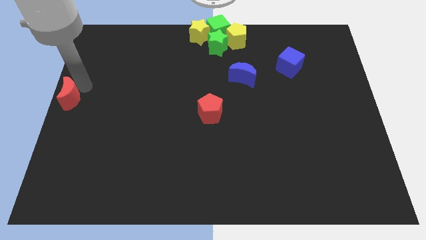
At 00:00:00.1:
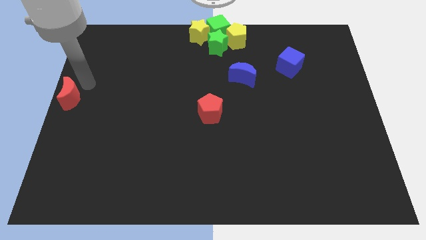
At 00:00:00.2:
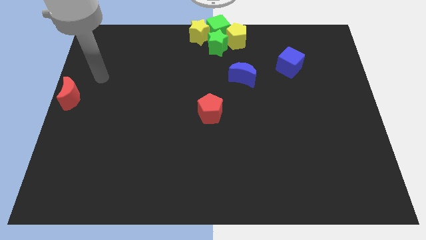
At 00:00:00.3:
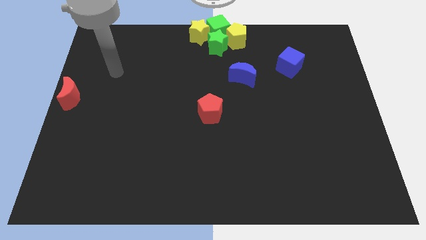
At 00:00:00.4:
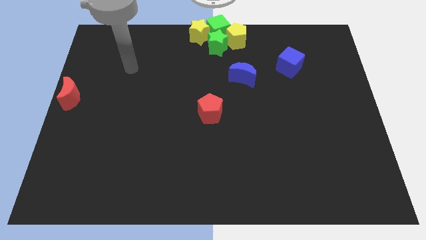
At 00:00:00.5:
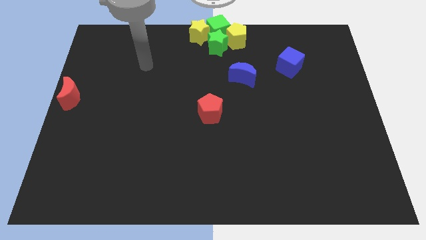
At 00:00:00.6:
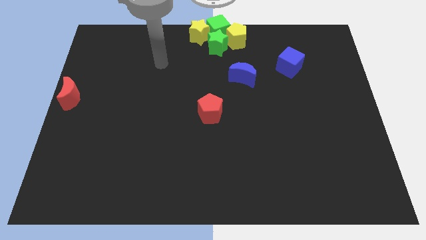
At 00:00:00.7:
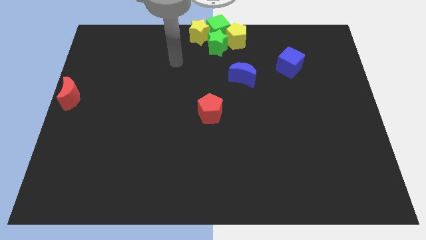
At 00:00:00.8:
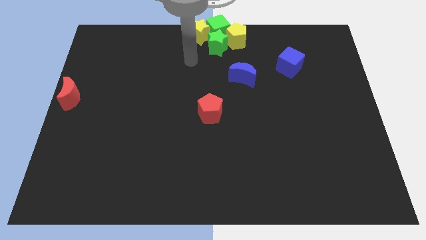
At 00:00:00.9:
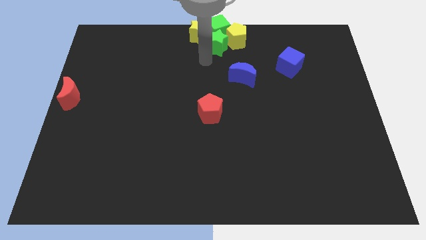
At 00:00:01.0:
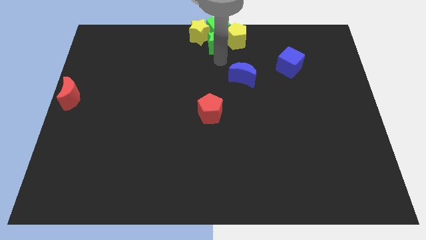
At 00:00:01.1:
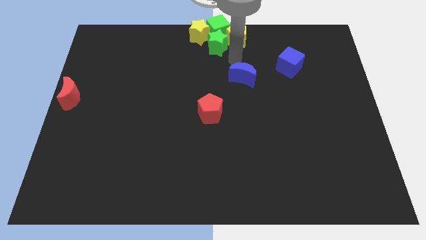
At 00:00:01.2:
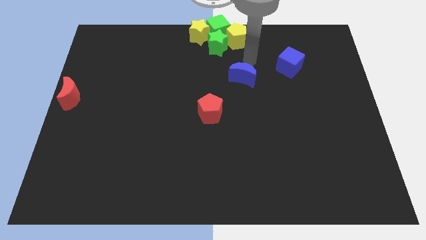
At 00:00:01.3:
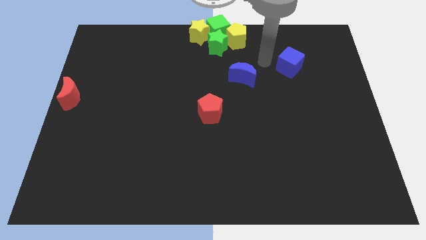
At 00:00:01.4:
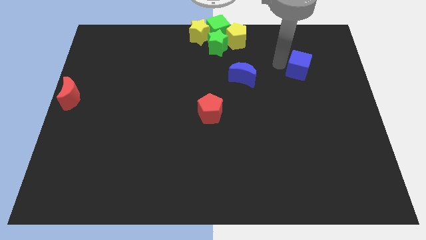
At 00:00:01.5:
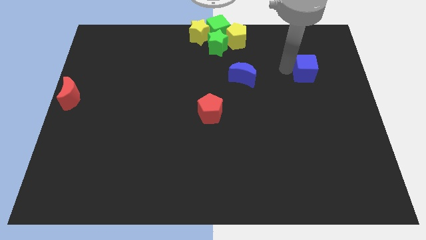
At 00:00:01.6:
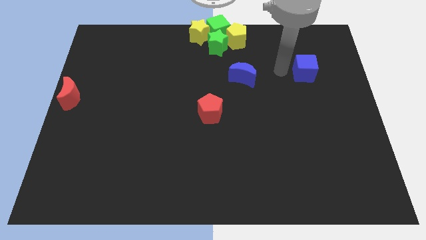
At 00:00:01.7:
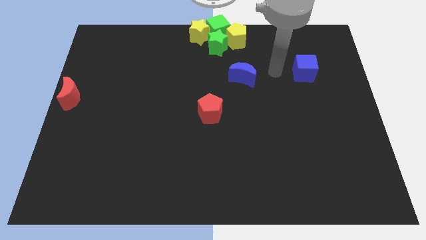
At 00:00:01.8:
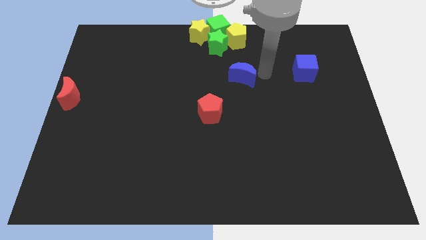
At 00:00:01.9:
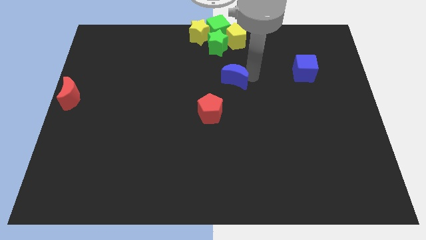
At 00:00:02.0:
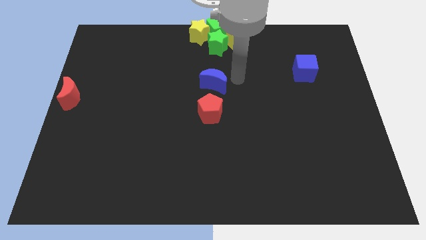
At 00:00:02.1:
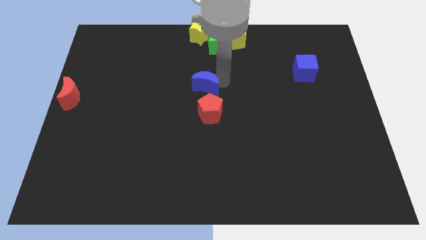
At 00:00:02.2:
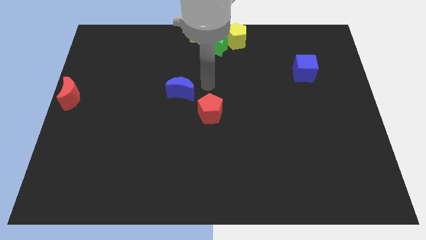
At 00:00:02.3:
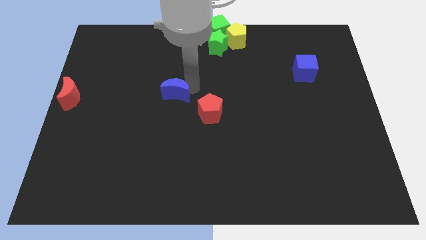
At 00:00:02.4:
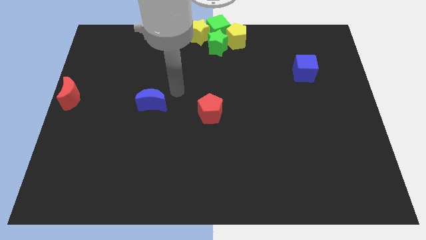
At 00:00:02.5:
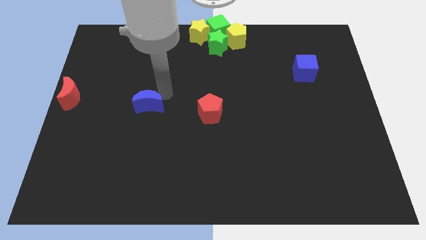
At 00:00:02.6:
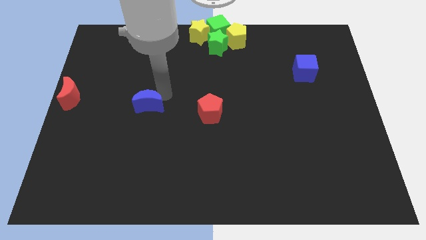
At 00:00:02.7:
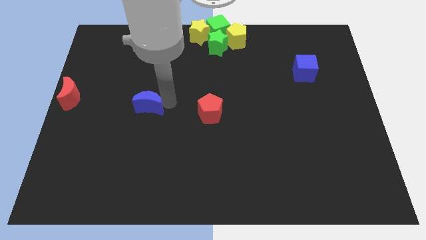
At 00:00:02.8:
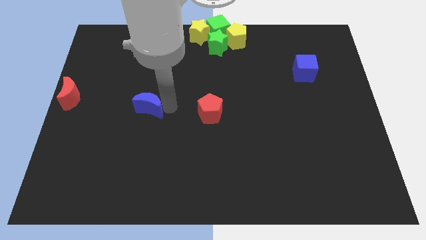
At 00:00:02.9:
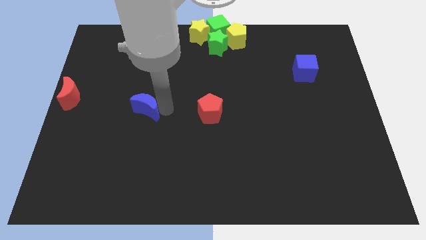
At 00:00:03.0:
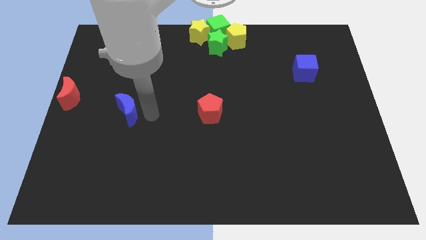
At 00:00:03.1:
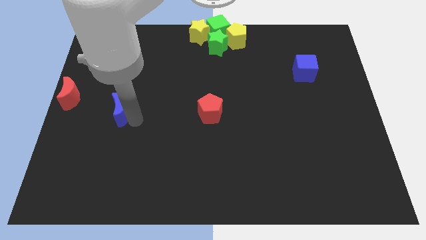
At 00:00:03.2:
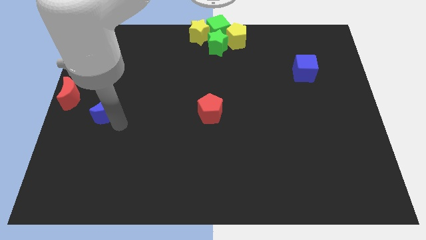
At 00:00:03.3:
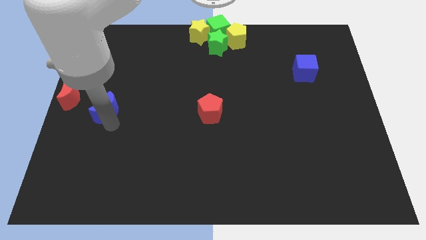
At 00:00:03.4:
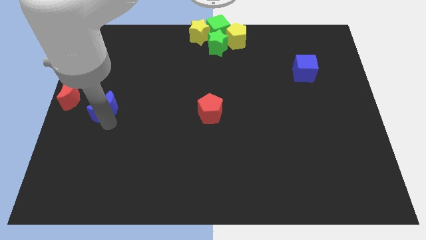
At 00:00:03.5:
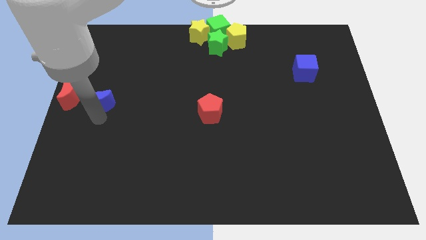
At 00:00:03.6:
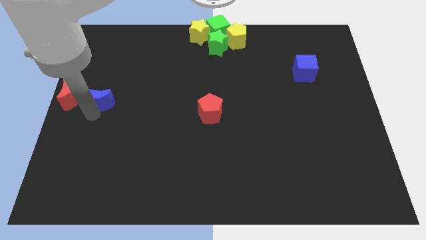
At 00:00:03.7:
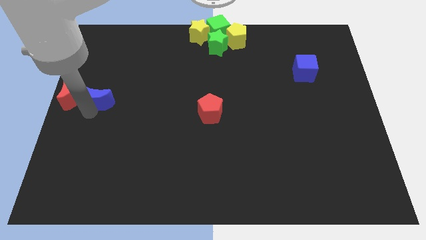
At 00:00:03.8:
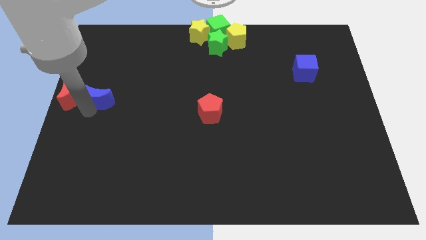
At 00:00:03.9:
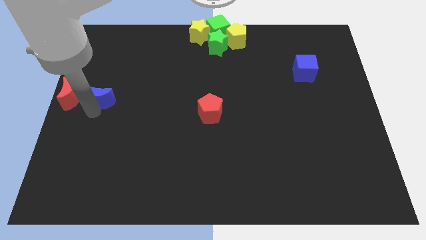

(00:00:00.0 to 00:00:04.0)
move the blue moon righr beside the red moon

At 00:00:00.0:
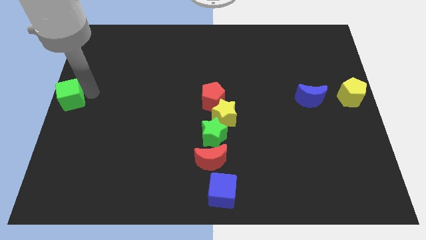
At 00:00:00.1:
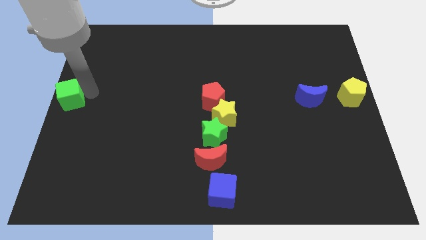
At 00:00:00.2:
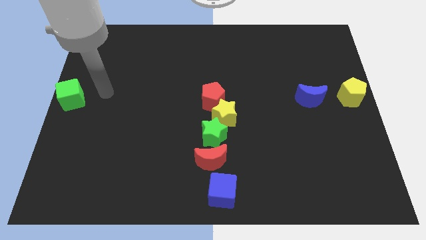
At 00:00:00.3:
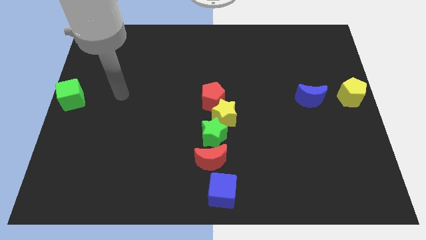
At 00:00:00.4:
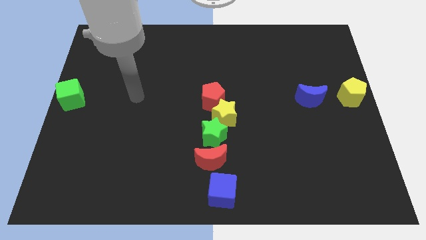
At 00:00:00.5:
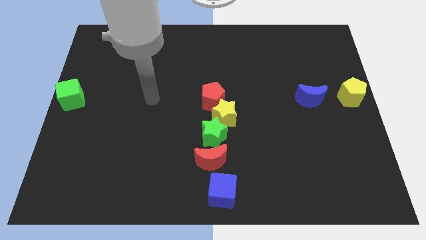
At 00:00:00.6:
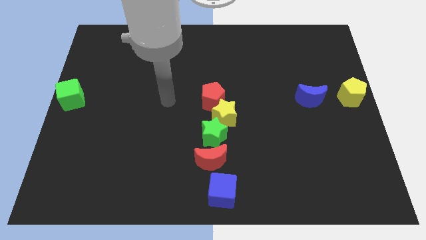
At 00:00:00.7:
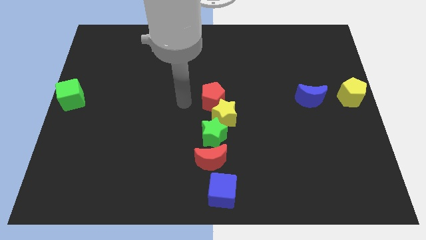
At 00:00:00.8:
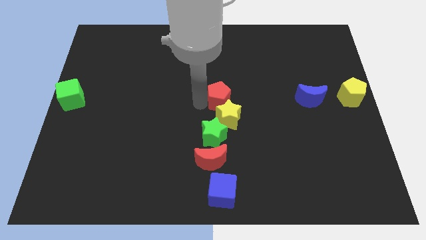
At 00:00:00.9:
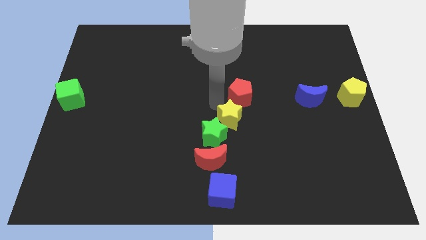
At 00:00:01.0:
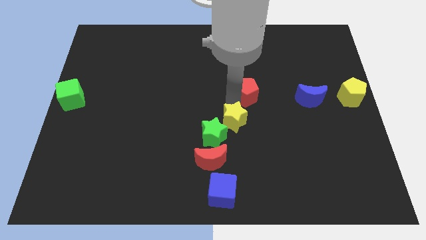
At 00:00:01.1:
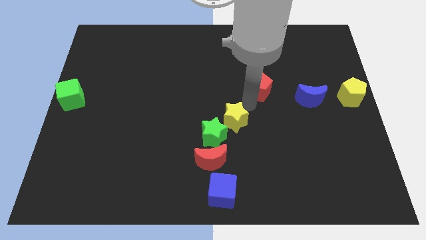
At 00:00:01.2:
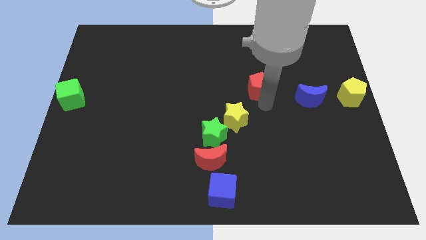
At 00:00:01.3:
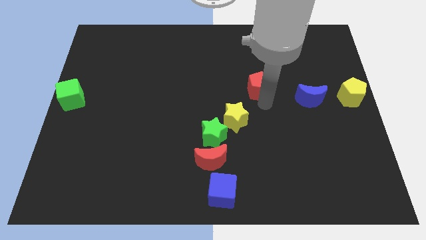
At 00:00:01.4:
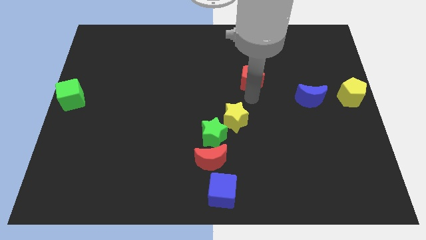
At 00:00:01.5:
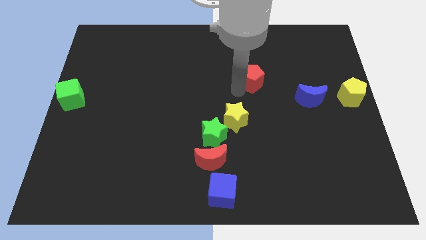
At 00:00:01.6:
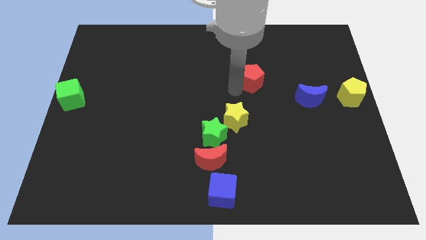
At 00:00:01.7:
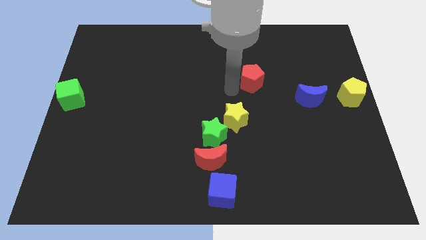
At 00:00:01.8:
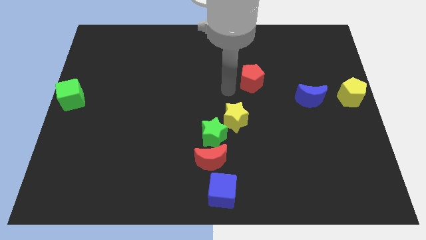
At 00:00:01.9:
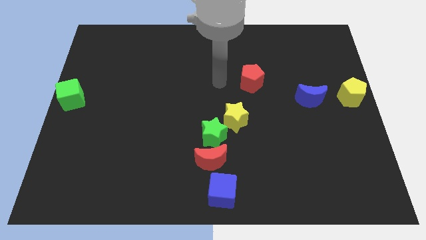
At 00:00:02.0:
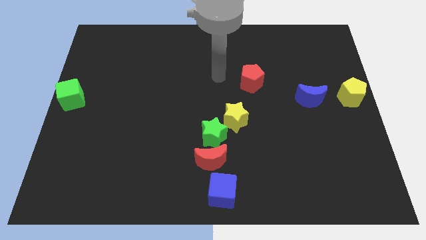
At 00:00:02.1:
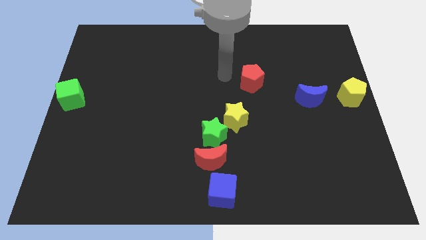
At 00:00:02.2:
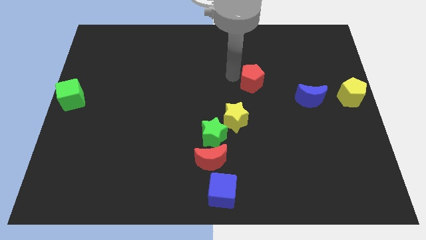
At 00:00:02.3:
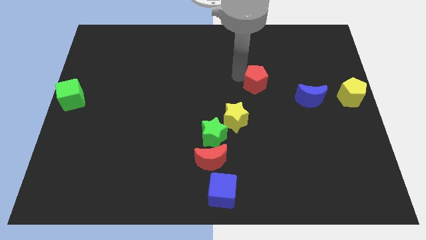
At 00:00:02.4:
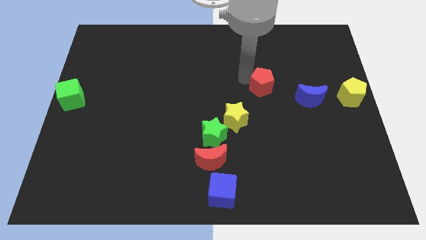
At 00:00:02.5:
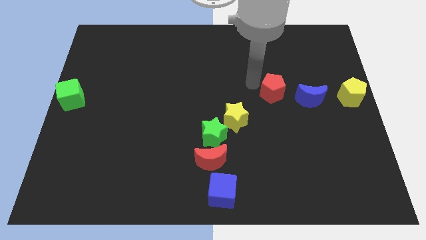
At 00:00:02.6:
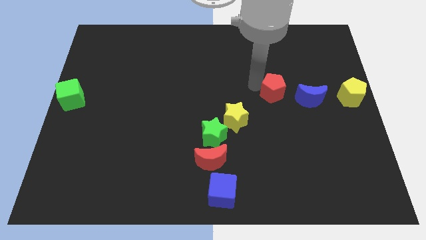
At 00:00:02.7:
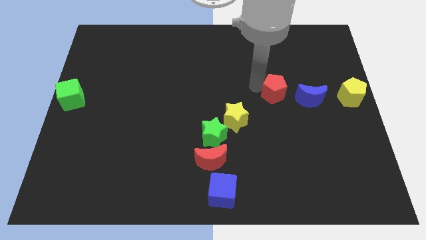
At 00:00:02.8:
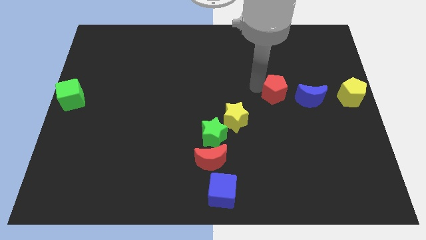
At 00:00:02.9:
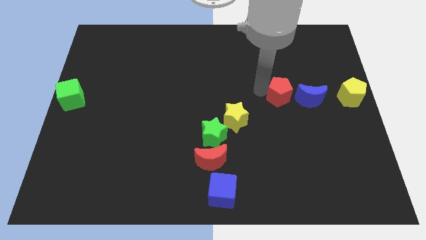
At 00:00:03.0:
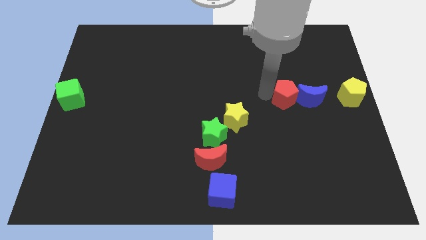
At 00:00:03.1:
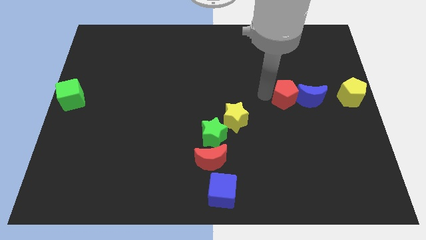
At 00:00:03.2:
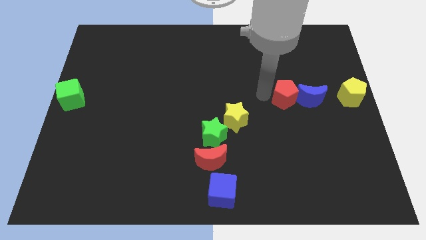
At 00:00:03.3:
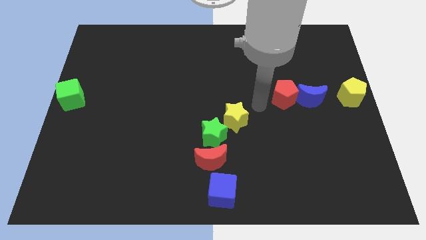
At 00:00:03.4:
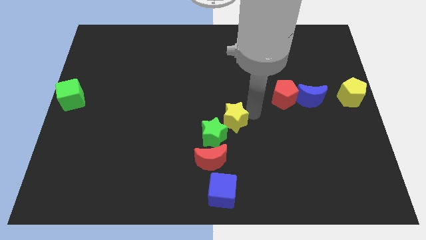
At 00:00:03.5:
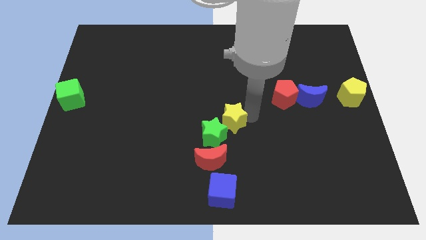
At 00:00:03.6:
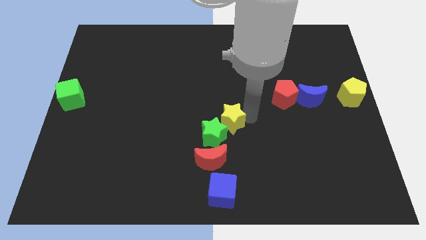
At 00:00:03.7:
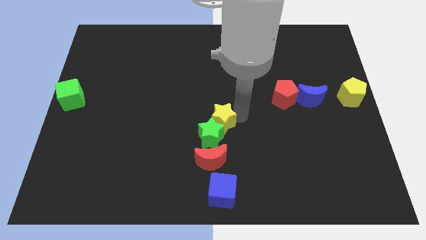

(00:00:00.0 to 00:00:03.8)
move the red pentagon near to the blue crescent

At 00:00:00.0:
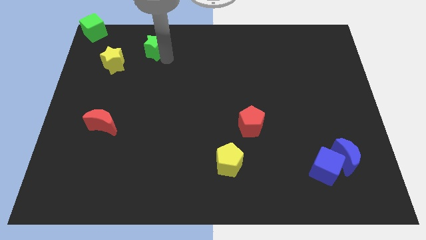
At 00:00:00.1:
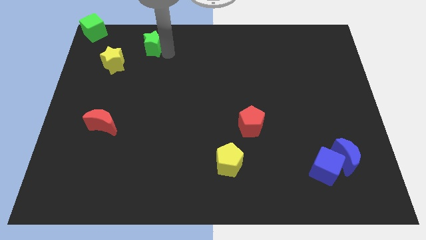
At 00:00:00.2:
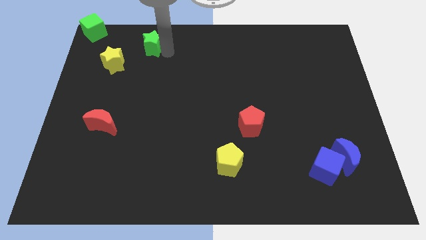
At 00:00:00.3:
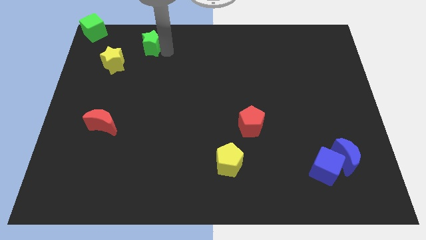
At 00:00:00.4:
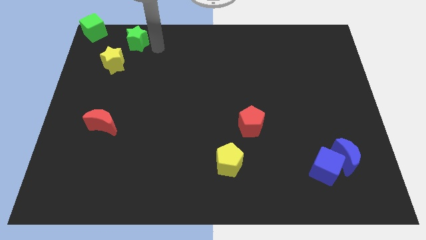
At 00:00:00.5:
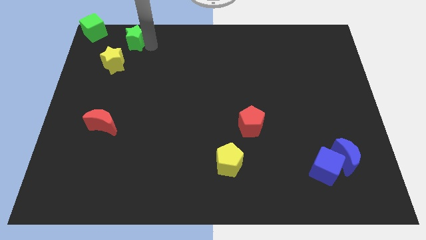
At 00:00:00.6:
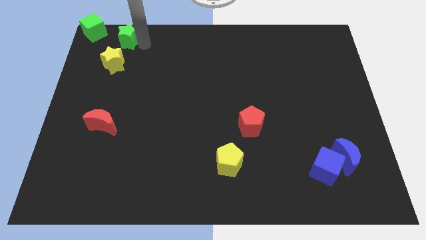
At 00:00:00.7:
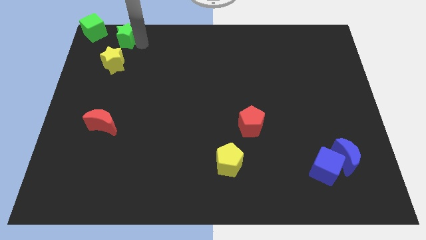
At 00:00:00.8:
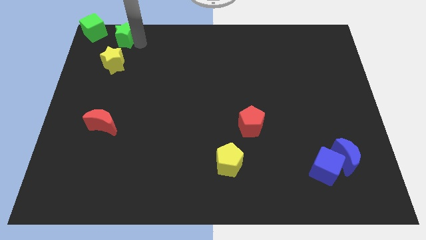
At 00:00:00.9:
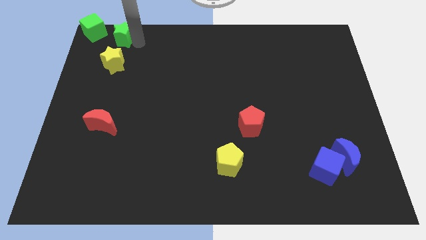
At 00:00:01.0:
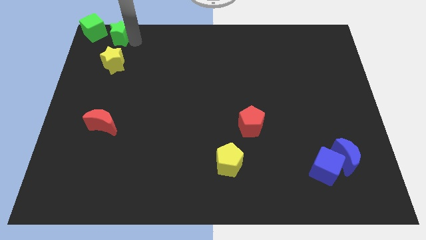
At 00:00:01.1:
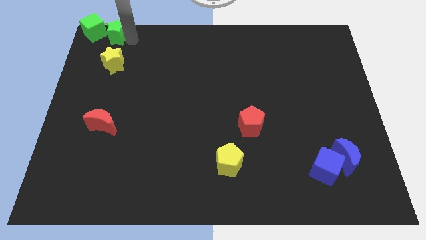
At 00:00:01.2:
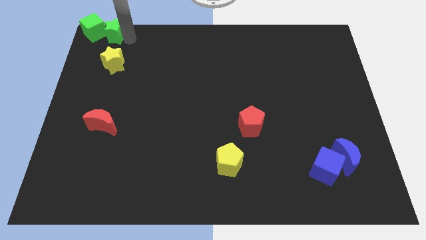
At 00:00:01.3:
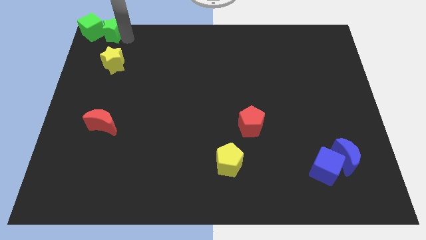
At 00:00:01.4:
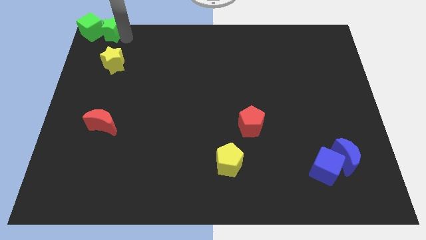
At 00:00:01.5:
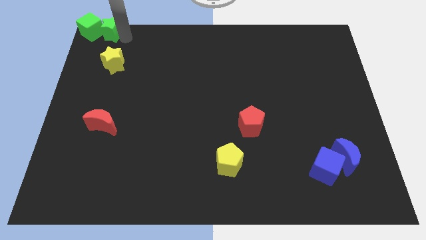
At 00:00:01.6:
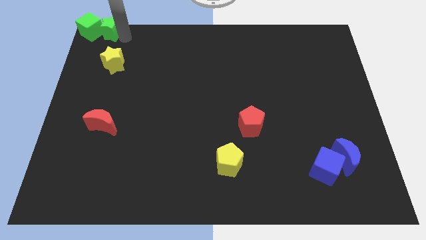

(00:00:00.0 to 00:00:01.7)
push green star towards green cube
